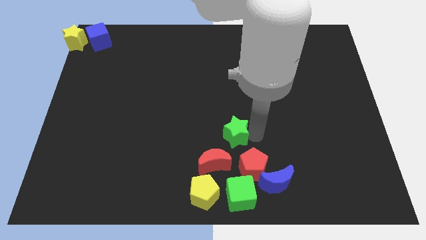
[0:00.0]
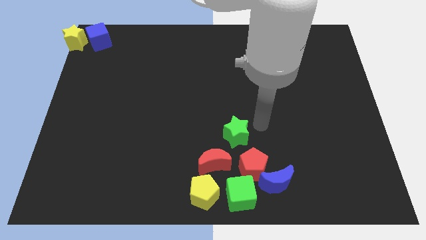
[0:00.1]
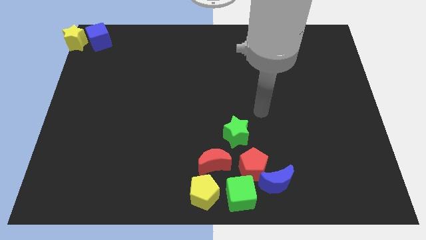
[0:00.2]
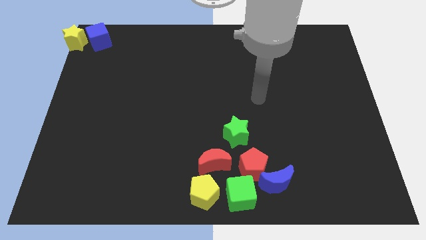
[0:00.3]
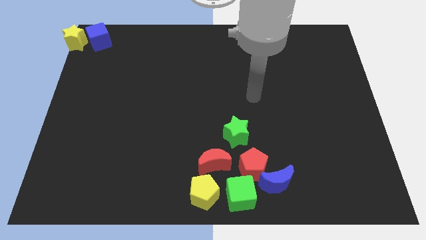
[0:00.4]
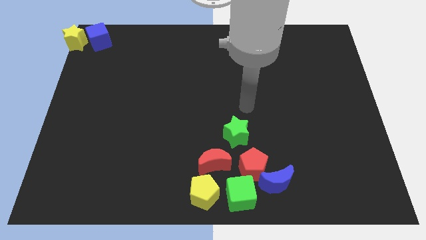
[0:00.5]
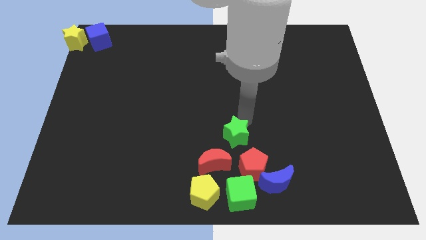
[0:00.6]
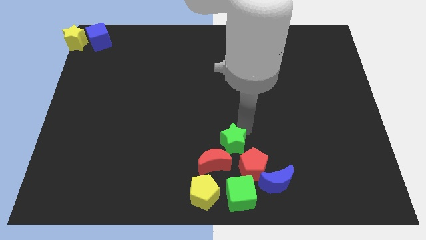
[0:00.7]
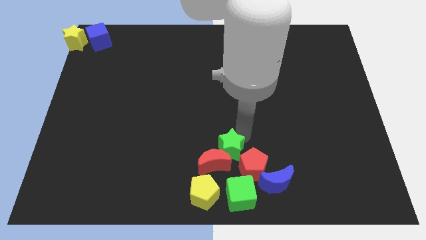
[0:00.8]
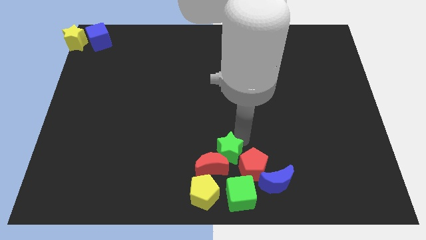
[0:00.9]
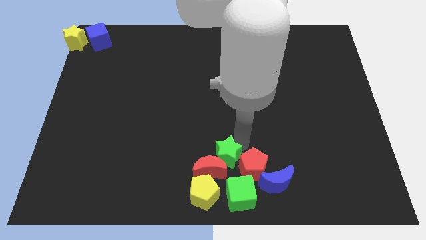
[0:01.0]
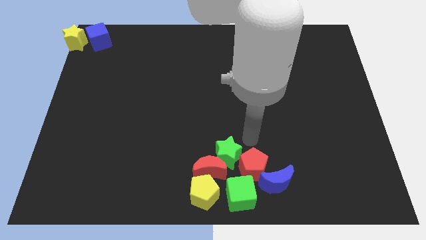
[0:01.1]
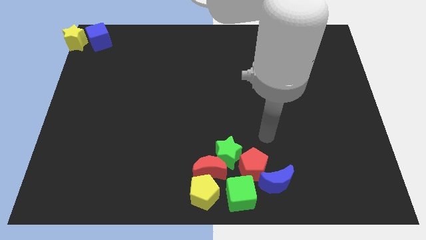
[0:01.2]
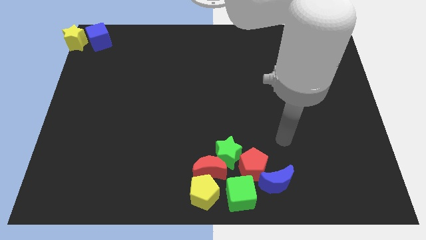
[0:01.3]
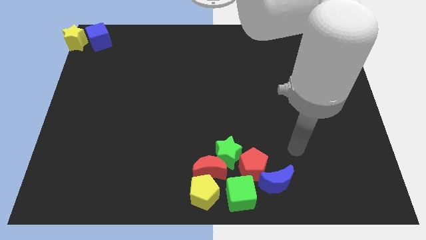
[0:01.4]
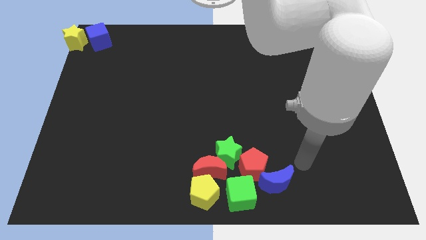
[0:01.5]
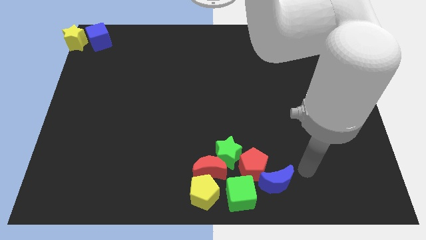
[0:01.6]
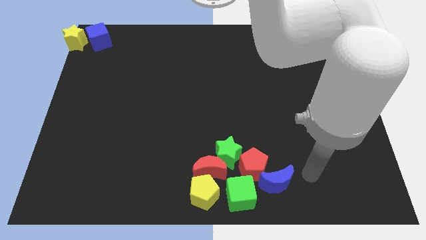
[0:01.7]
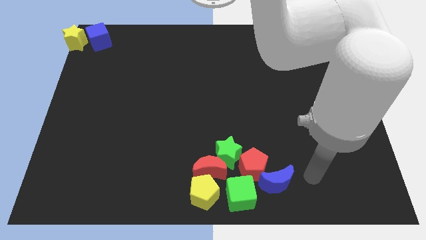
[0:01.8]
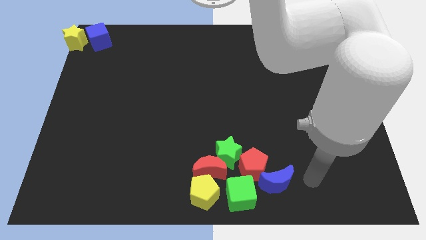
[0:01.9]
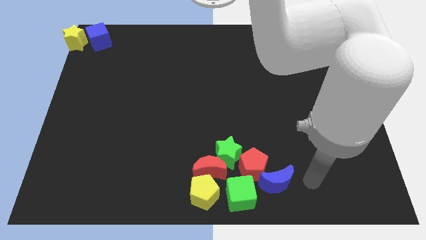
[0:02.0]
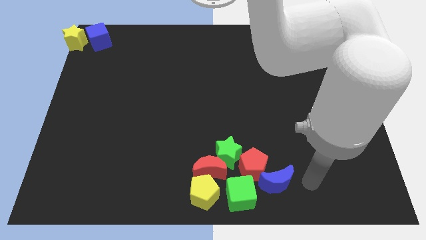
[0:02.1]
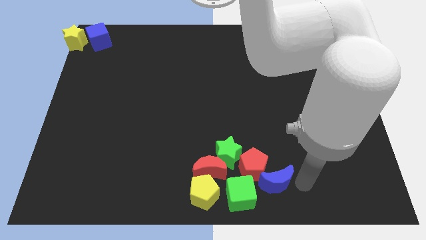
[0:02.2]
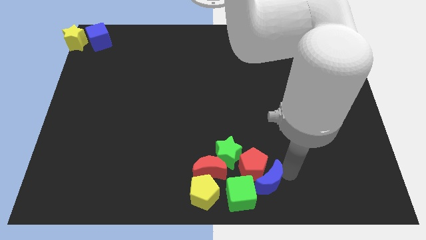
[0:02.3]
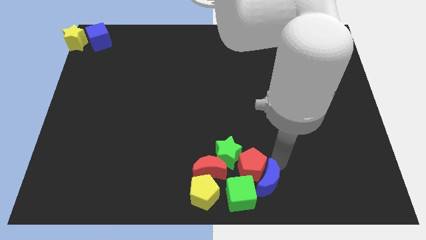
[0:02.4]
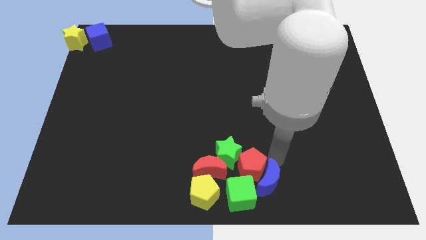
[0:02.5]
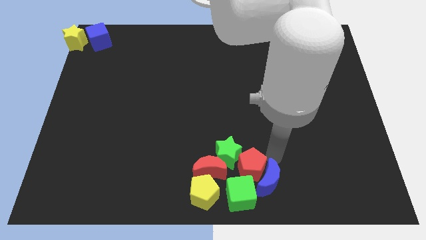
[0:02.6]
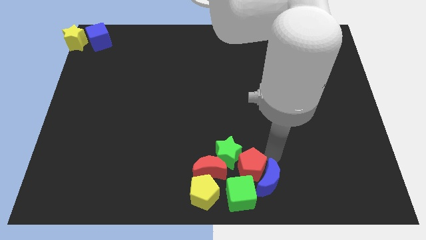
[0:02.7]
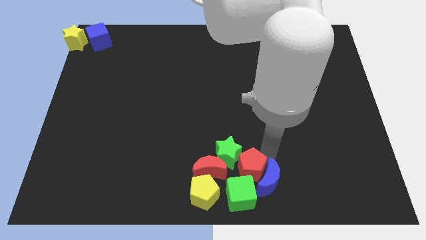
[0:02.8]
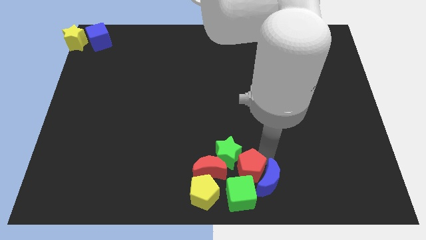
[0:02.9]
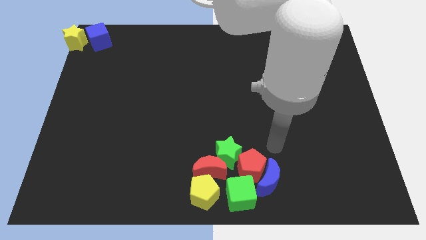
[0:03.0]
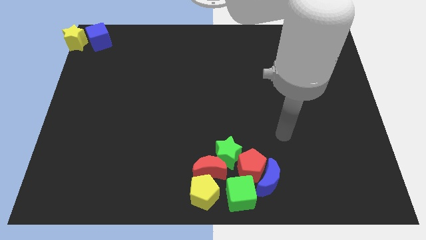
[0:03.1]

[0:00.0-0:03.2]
push the green star into the group of blocks

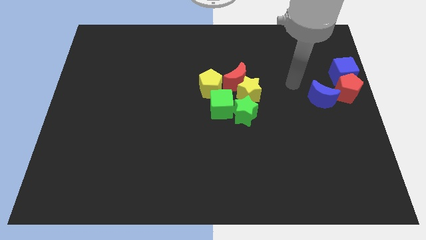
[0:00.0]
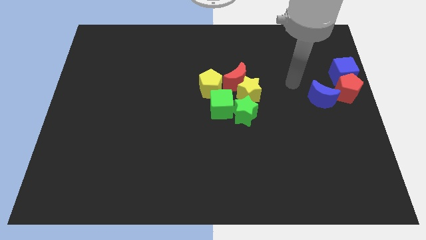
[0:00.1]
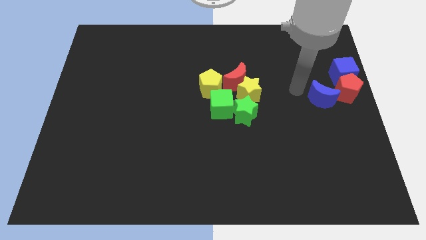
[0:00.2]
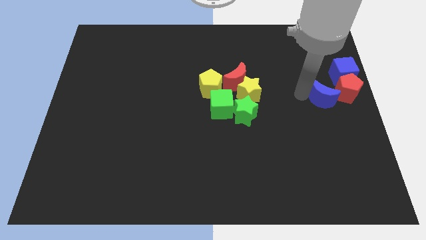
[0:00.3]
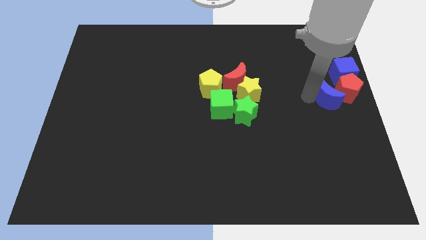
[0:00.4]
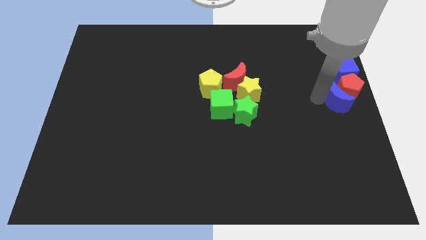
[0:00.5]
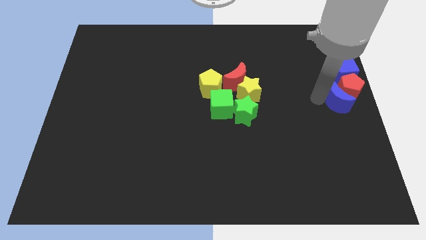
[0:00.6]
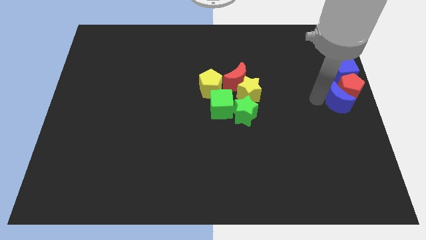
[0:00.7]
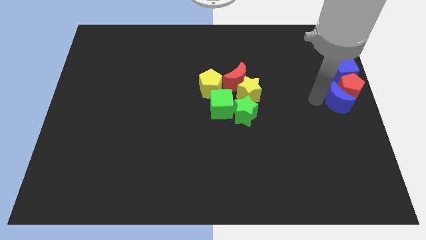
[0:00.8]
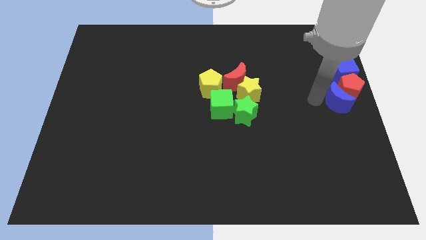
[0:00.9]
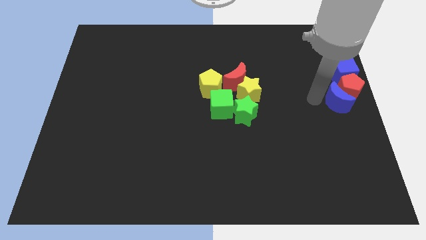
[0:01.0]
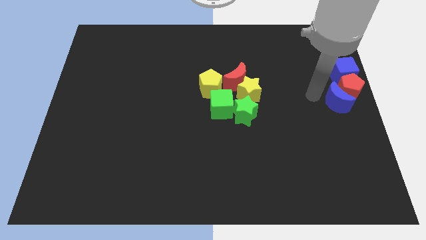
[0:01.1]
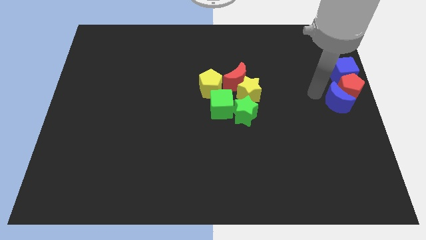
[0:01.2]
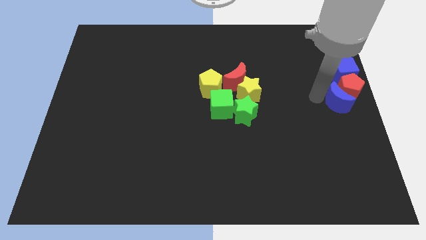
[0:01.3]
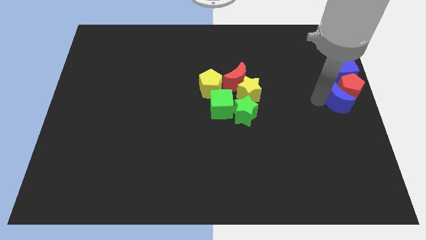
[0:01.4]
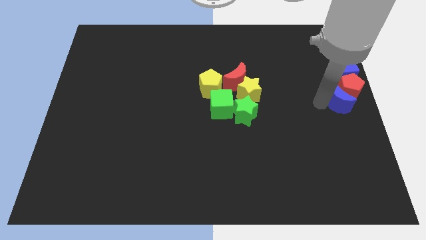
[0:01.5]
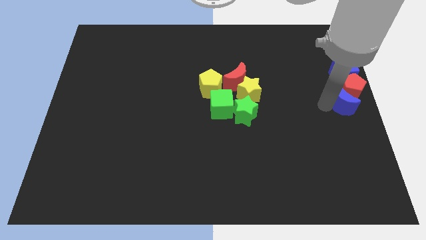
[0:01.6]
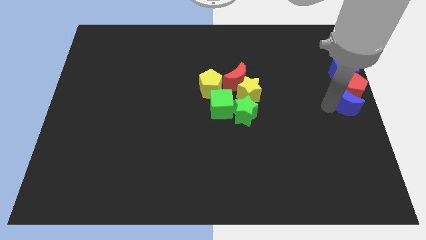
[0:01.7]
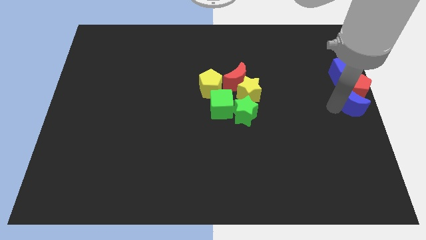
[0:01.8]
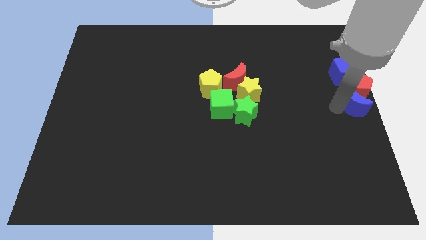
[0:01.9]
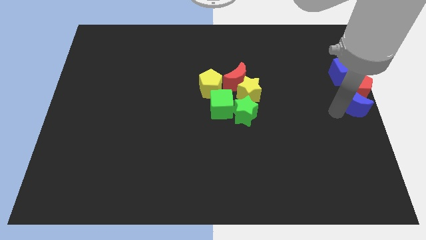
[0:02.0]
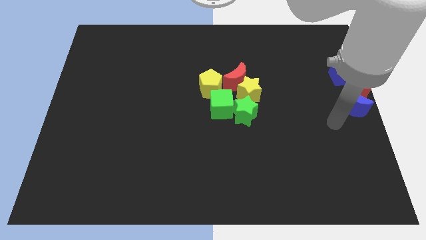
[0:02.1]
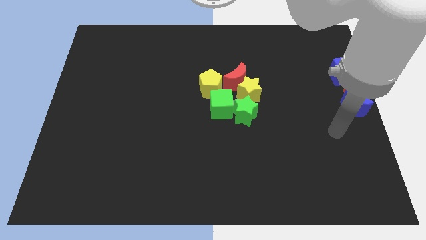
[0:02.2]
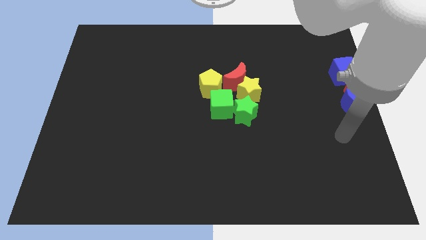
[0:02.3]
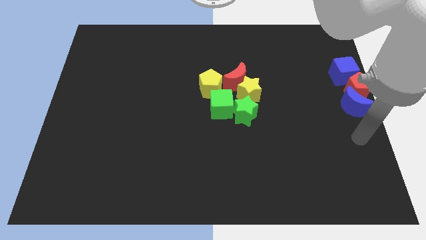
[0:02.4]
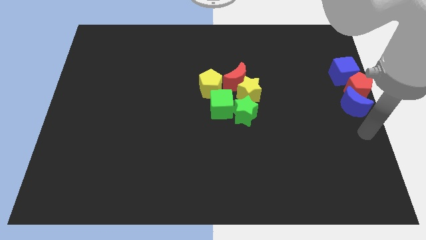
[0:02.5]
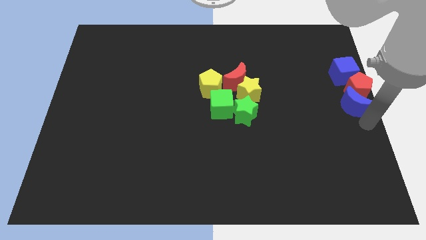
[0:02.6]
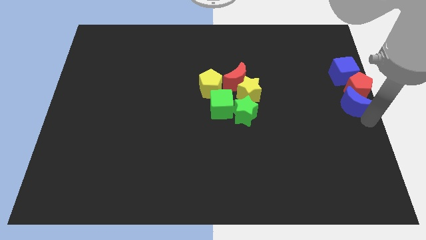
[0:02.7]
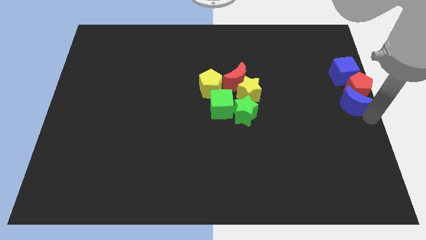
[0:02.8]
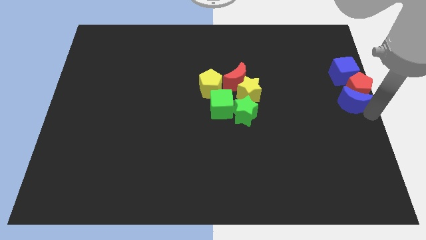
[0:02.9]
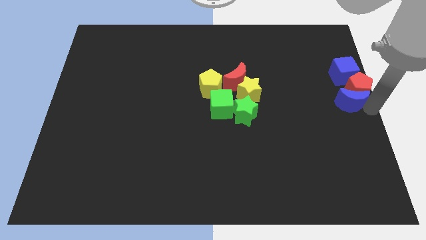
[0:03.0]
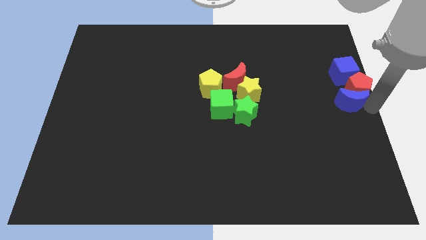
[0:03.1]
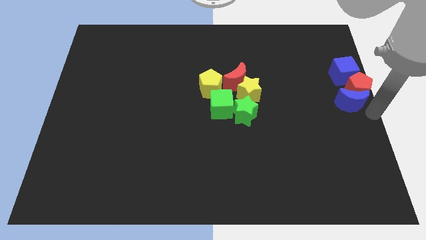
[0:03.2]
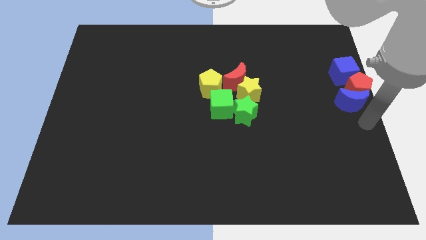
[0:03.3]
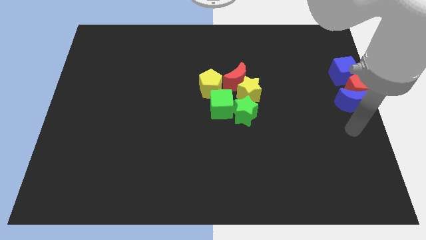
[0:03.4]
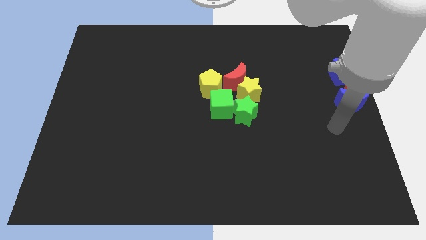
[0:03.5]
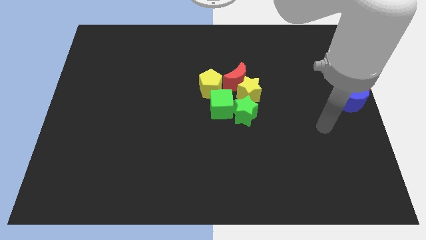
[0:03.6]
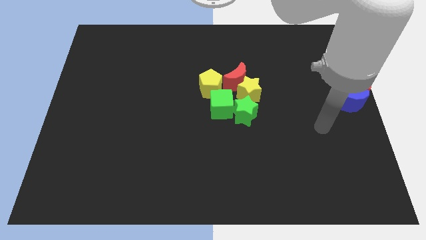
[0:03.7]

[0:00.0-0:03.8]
move the blue moon to the center right

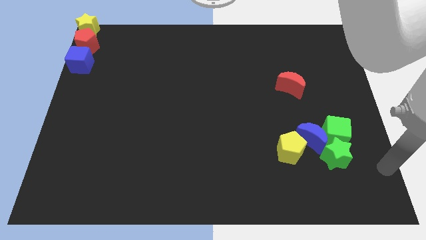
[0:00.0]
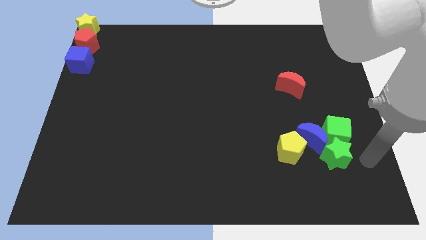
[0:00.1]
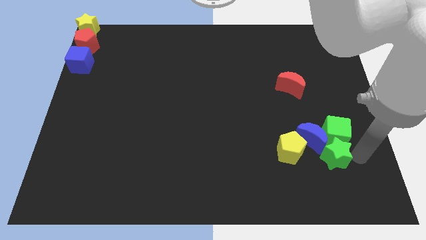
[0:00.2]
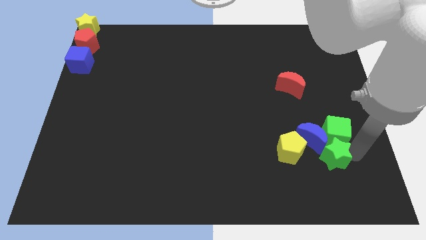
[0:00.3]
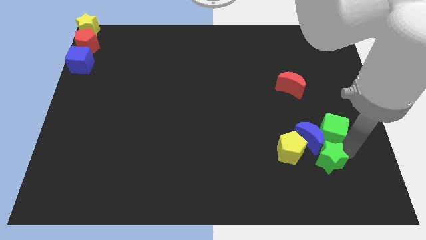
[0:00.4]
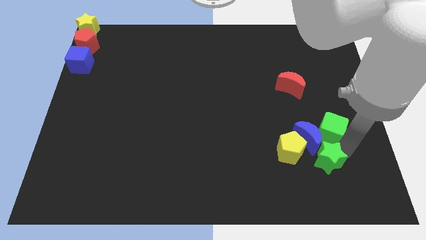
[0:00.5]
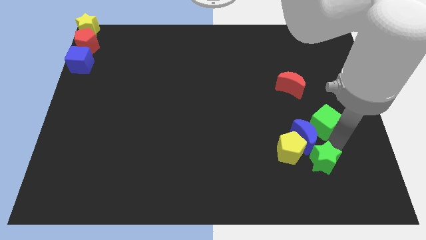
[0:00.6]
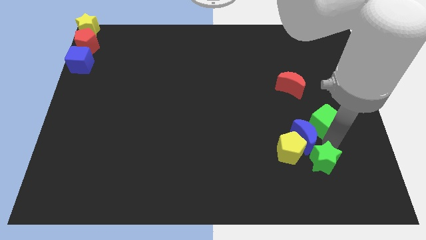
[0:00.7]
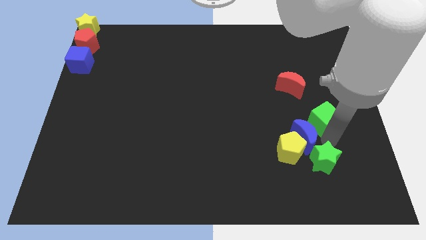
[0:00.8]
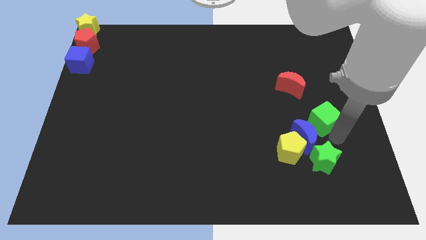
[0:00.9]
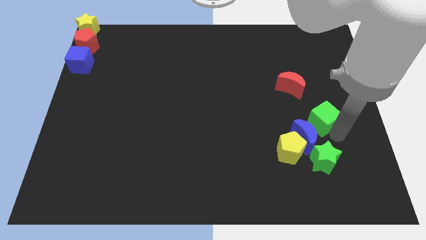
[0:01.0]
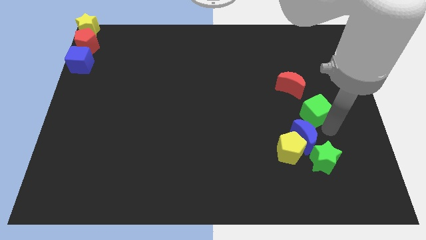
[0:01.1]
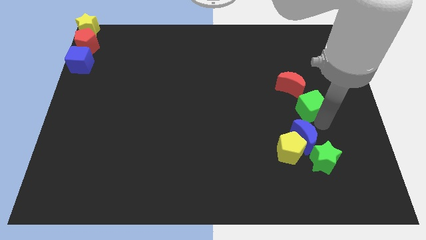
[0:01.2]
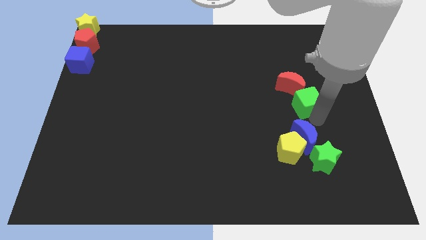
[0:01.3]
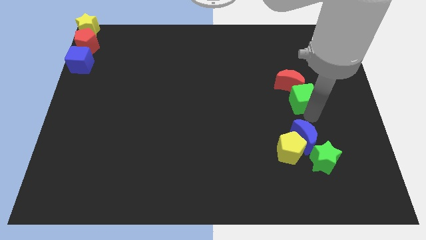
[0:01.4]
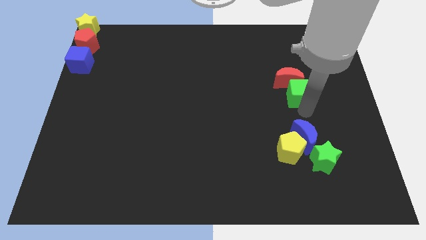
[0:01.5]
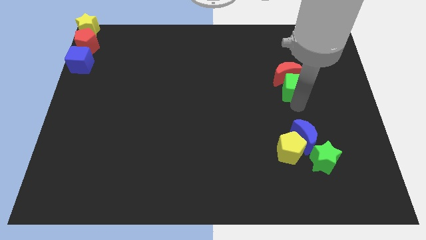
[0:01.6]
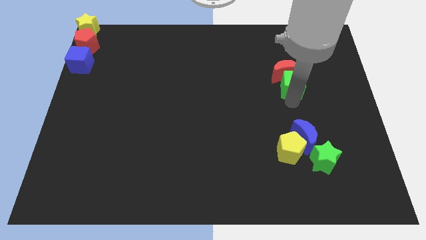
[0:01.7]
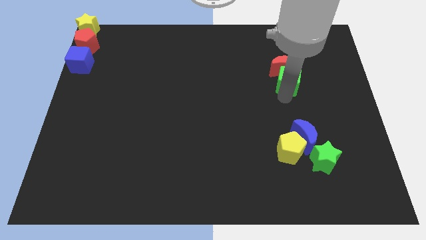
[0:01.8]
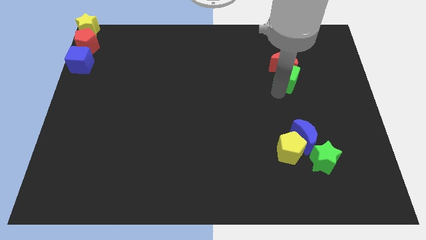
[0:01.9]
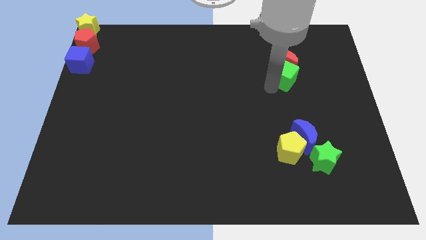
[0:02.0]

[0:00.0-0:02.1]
push the green cube into the red moon
